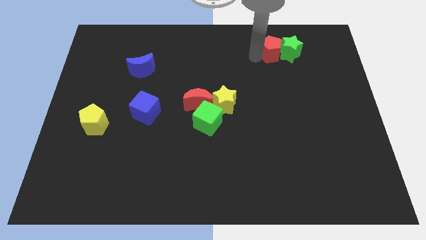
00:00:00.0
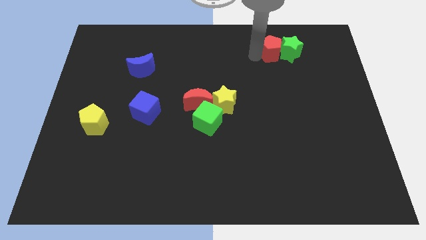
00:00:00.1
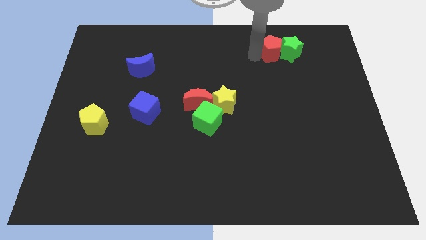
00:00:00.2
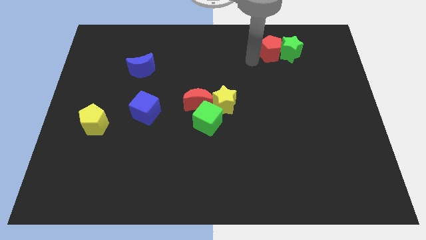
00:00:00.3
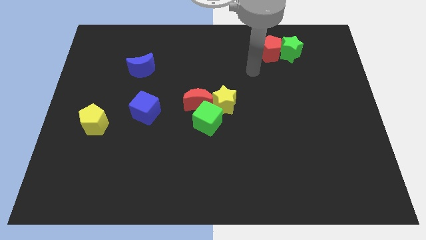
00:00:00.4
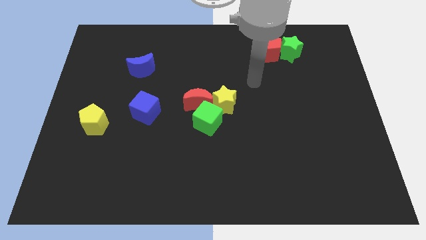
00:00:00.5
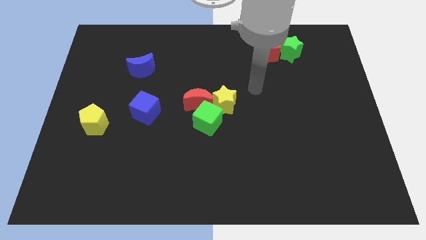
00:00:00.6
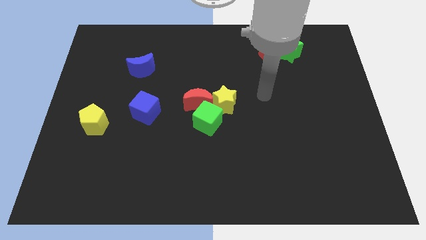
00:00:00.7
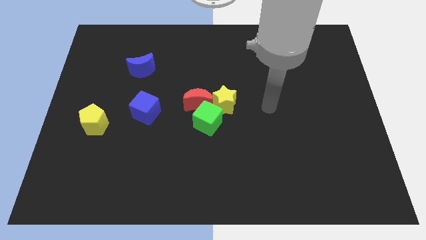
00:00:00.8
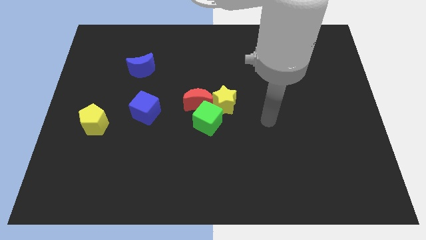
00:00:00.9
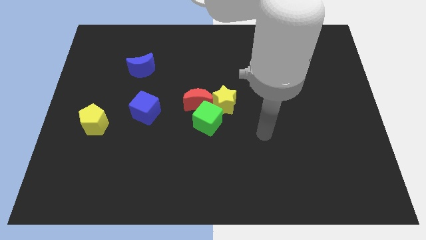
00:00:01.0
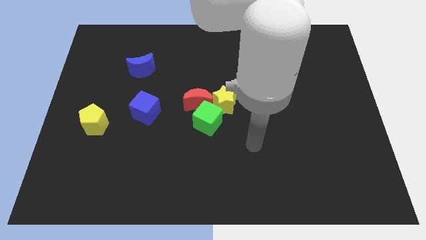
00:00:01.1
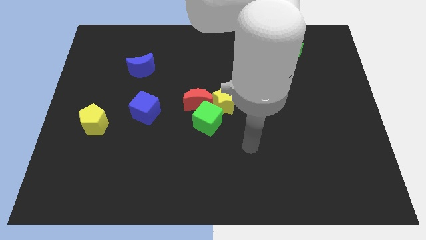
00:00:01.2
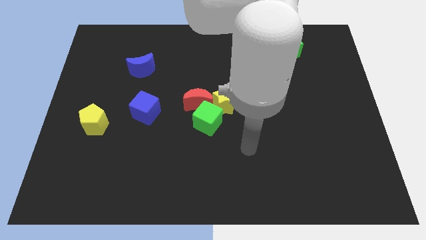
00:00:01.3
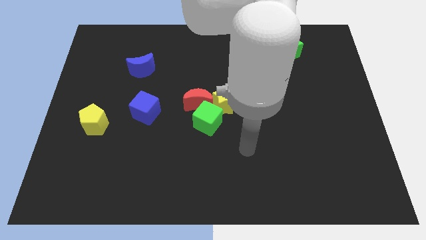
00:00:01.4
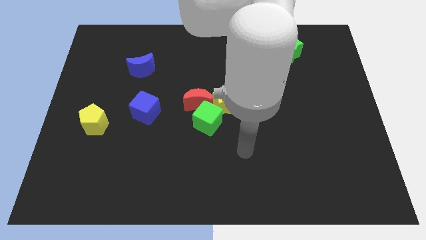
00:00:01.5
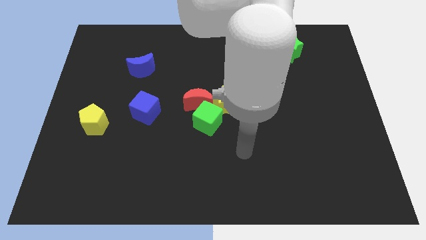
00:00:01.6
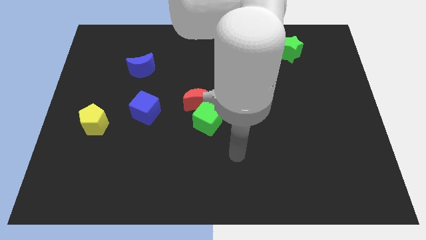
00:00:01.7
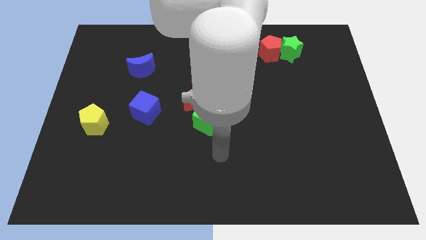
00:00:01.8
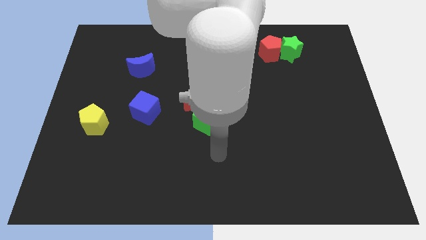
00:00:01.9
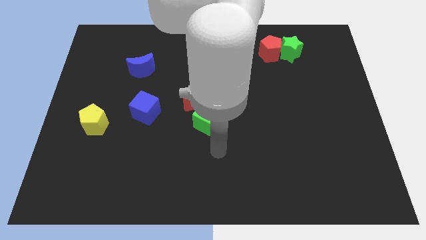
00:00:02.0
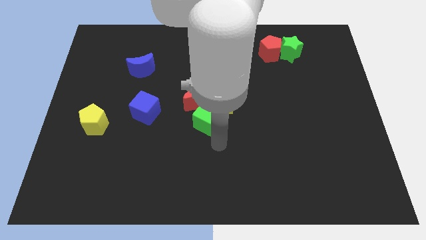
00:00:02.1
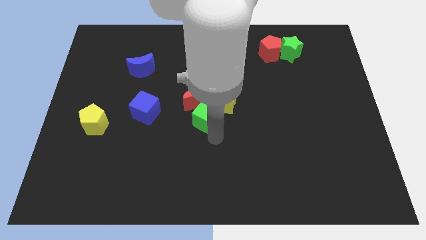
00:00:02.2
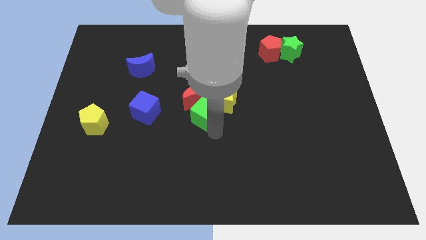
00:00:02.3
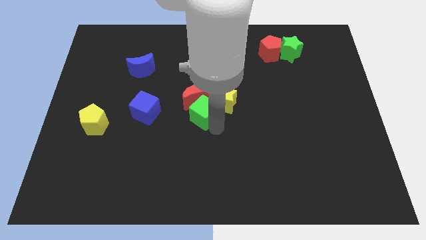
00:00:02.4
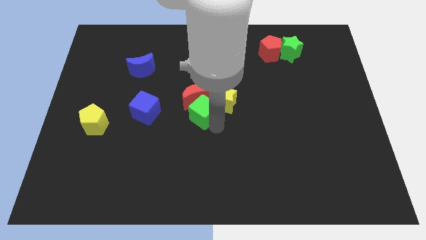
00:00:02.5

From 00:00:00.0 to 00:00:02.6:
place the arm near the green cube

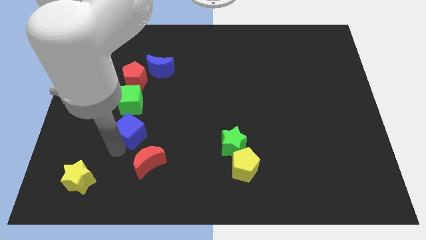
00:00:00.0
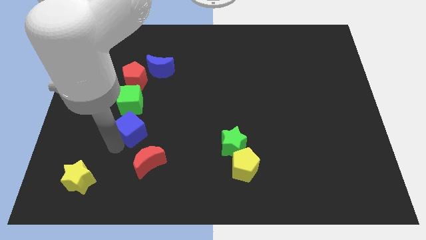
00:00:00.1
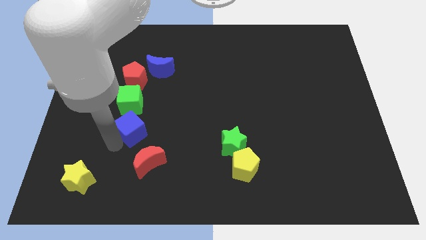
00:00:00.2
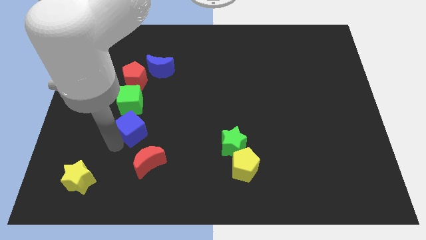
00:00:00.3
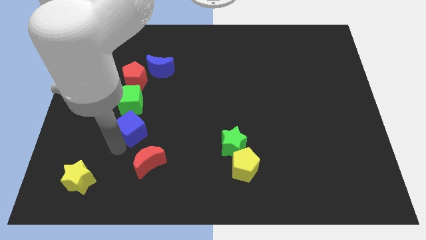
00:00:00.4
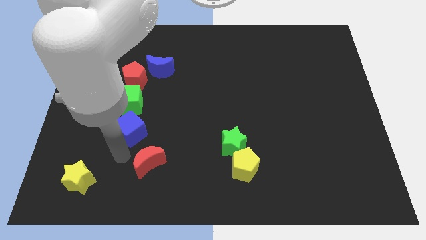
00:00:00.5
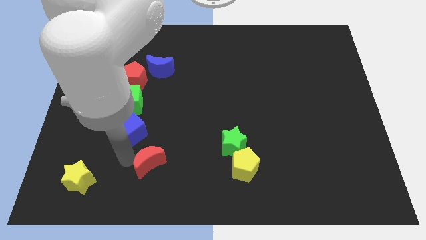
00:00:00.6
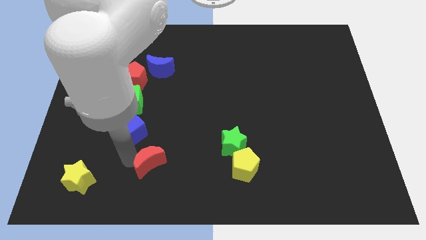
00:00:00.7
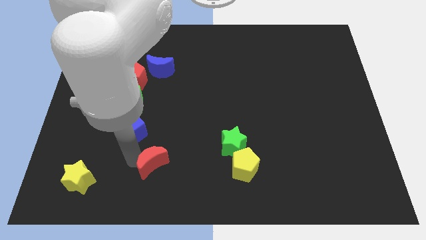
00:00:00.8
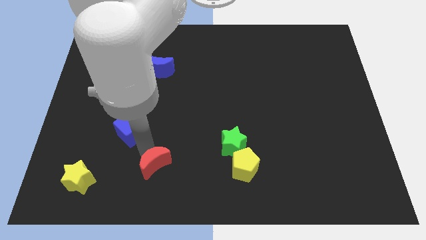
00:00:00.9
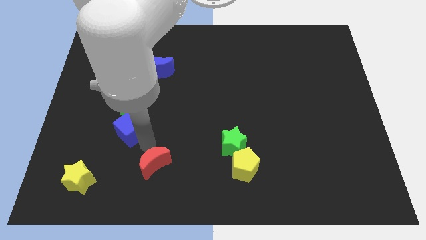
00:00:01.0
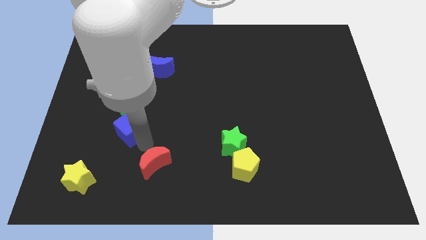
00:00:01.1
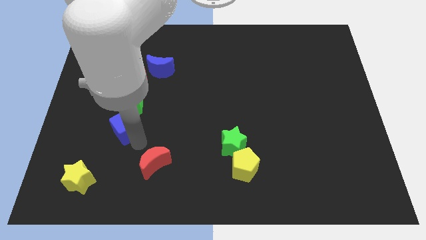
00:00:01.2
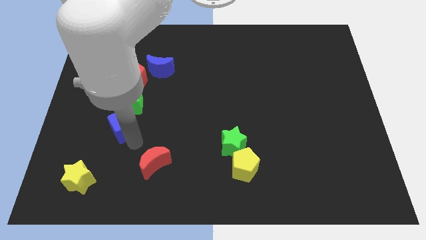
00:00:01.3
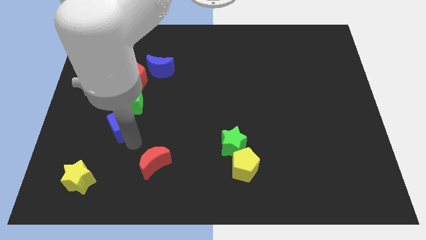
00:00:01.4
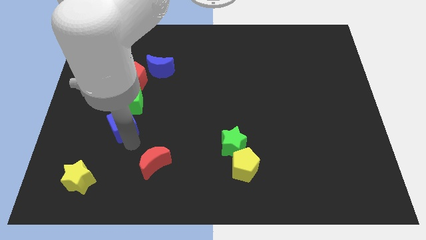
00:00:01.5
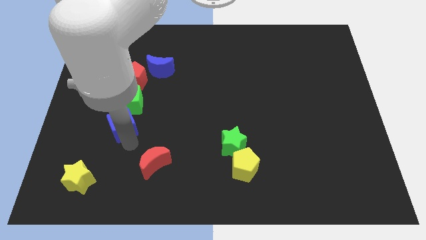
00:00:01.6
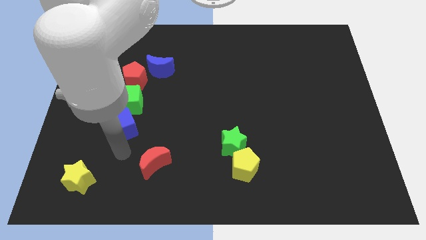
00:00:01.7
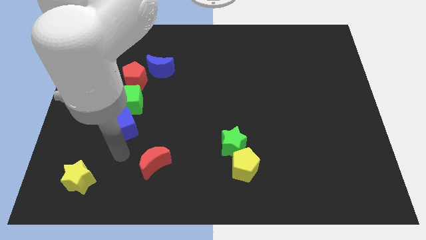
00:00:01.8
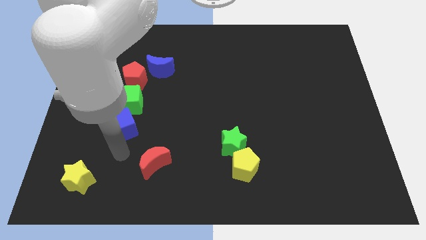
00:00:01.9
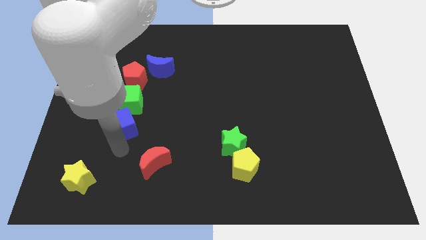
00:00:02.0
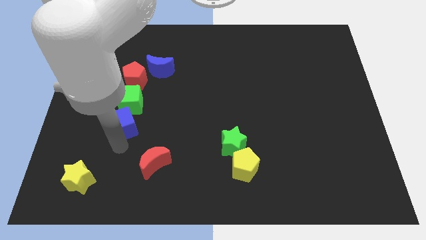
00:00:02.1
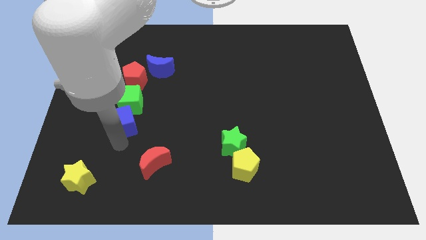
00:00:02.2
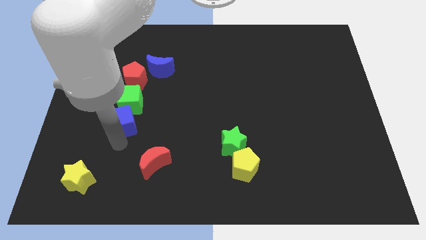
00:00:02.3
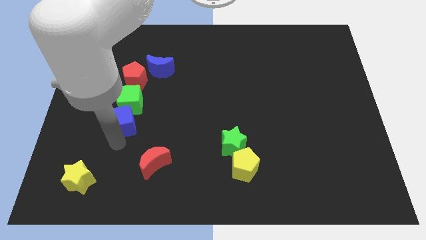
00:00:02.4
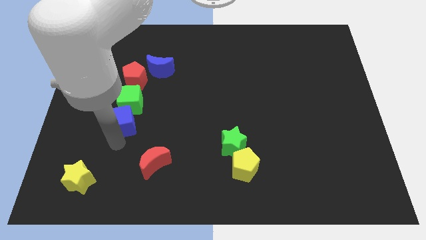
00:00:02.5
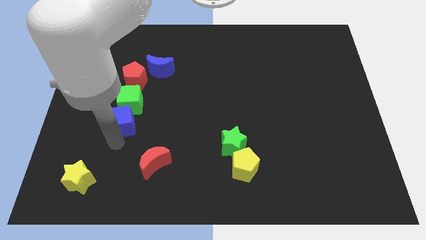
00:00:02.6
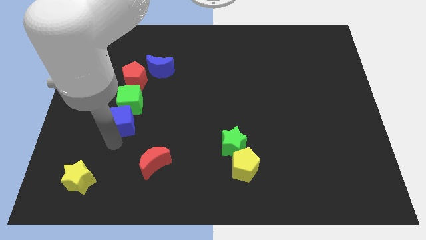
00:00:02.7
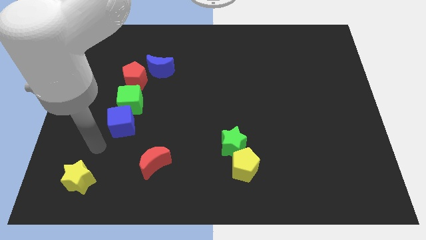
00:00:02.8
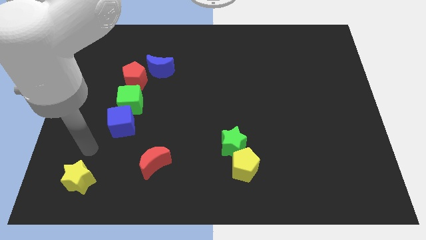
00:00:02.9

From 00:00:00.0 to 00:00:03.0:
push the blue cube below the green cube

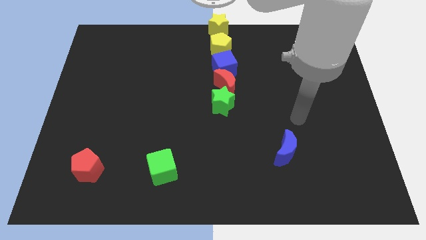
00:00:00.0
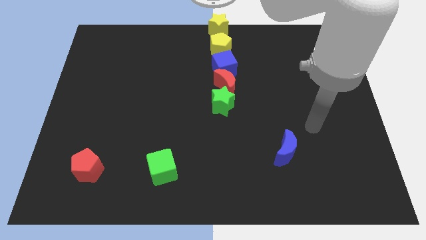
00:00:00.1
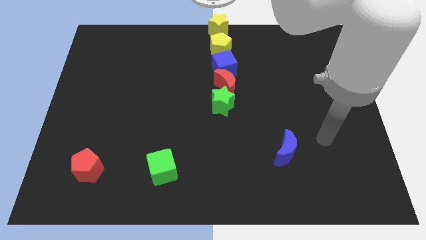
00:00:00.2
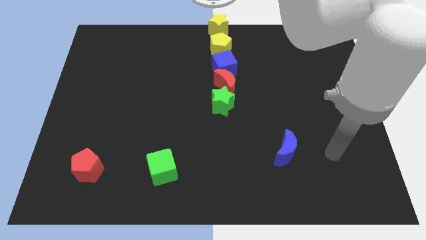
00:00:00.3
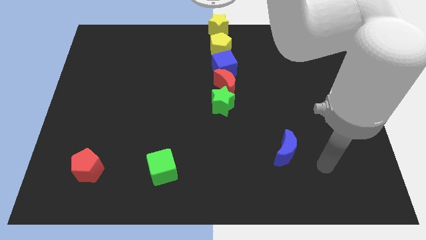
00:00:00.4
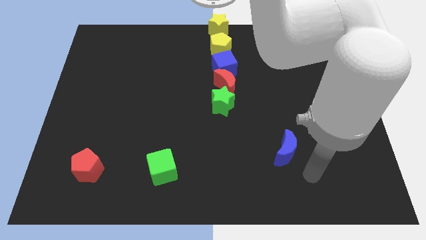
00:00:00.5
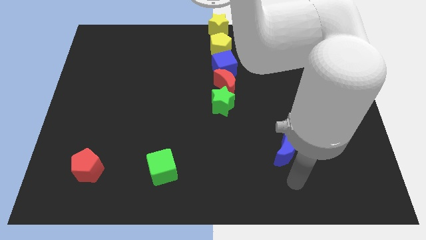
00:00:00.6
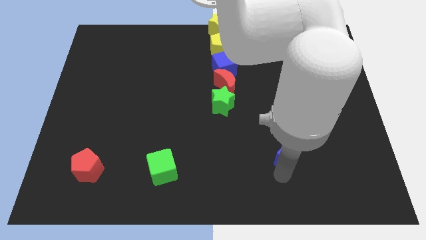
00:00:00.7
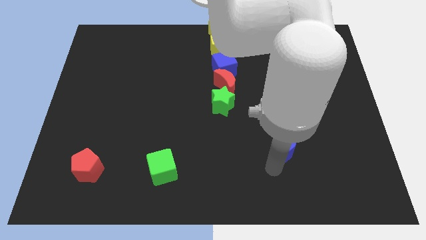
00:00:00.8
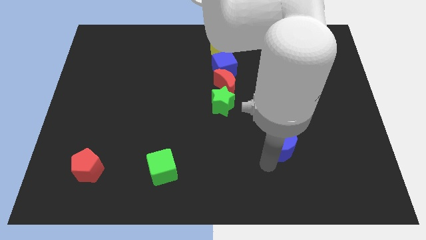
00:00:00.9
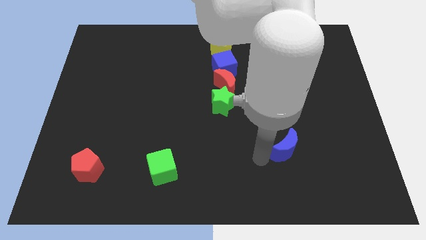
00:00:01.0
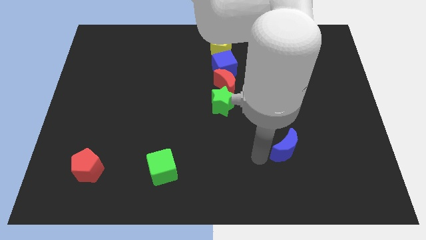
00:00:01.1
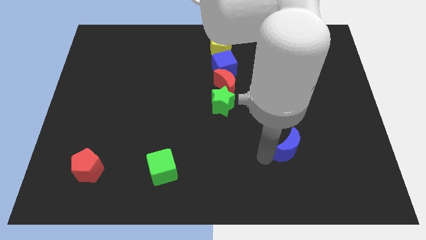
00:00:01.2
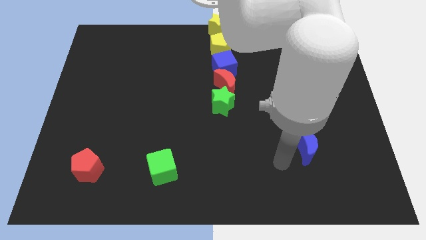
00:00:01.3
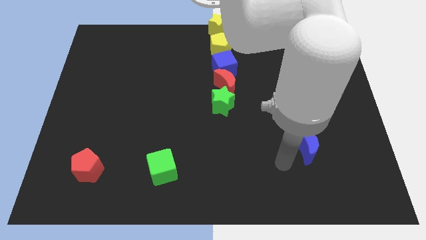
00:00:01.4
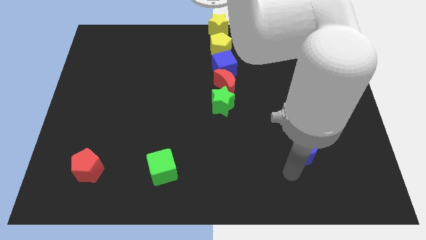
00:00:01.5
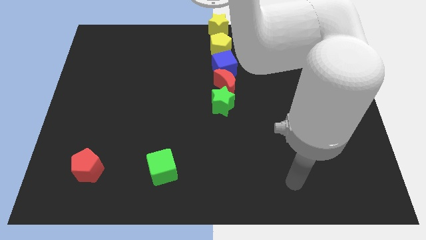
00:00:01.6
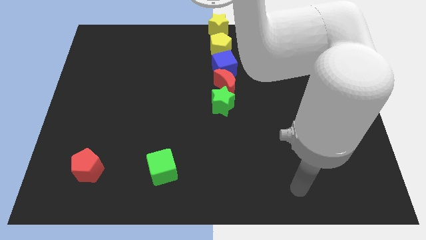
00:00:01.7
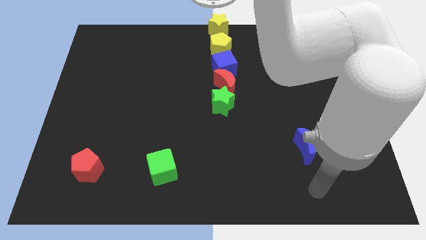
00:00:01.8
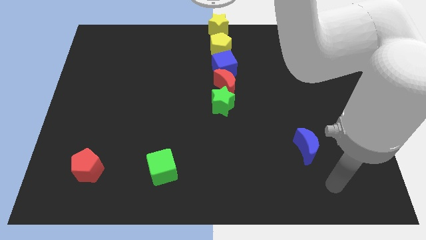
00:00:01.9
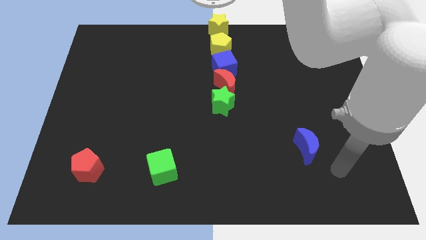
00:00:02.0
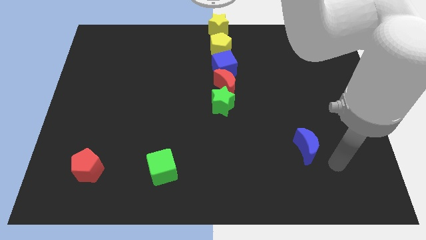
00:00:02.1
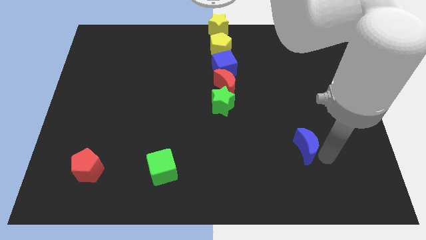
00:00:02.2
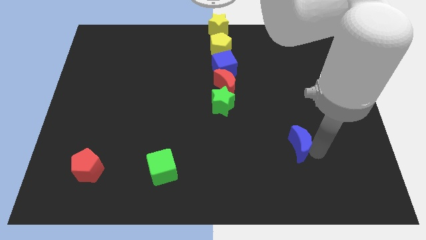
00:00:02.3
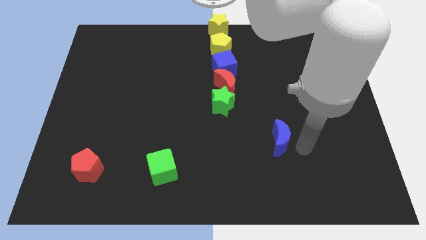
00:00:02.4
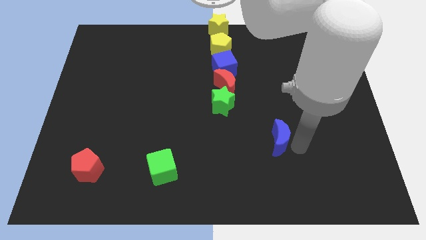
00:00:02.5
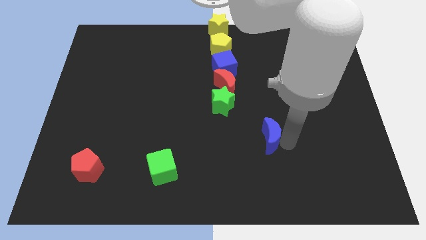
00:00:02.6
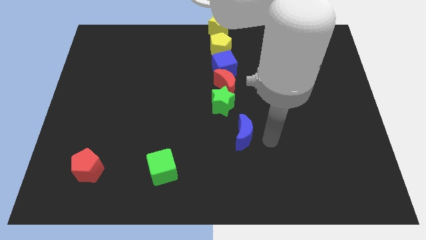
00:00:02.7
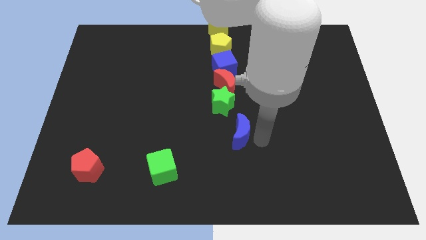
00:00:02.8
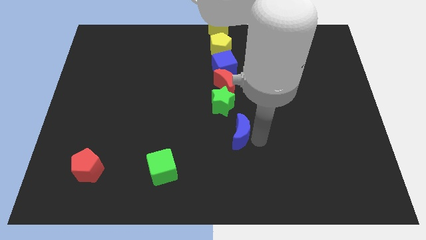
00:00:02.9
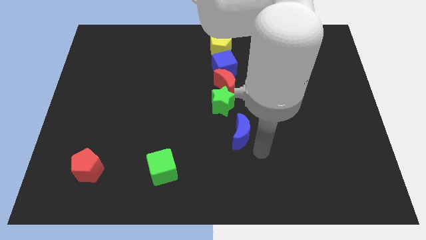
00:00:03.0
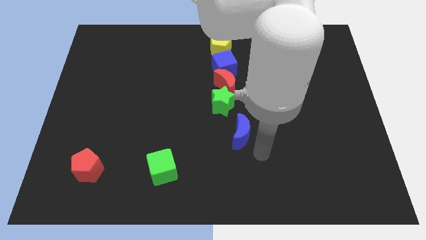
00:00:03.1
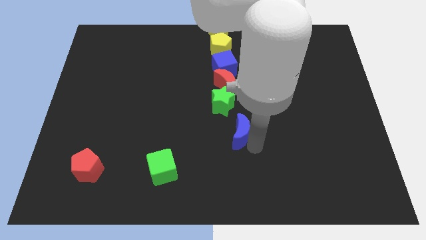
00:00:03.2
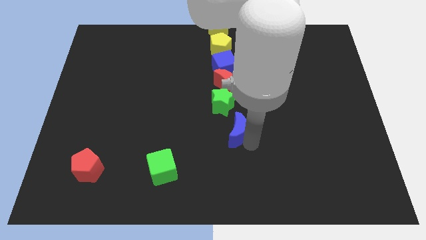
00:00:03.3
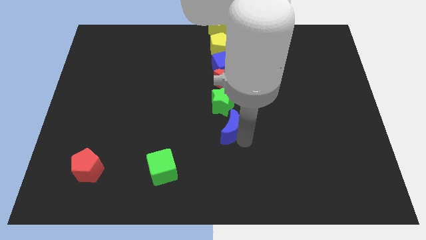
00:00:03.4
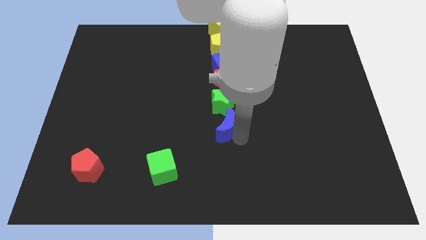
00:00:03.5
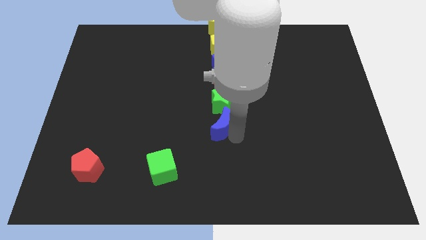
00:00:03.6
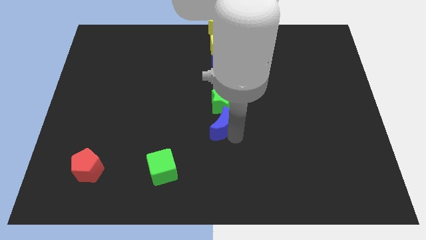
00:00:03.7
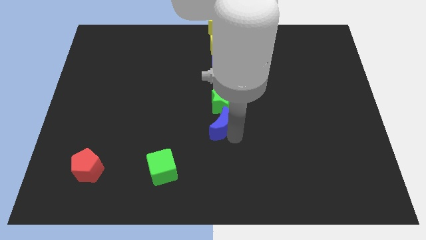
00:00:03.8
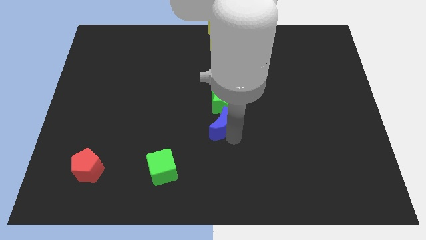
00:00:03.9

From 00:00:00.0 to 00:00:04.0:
put the blue crescent below the vertical group of blocks
